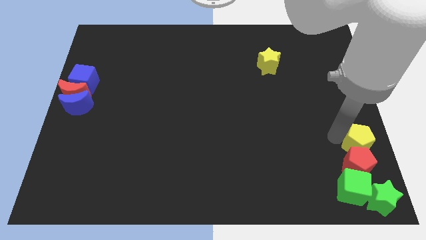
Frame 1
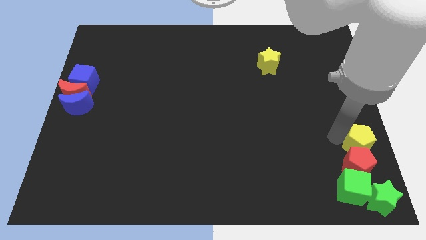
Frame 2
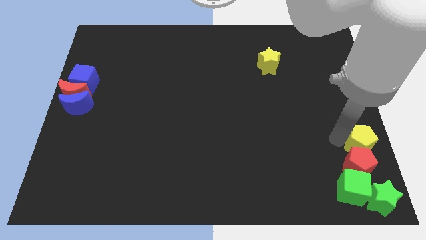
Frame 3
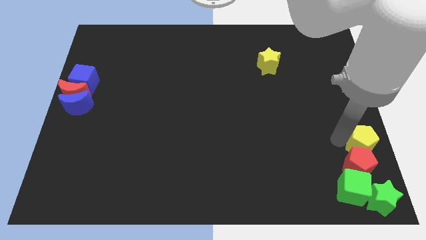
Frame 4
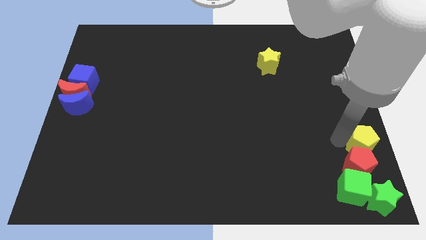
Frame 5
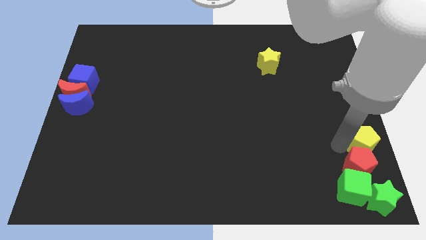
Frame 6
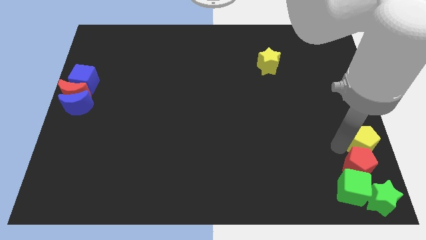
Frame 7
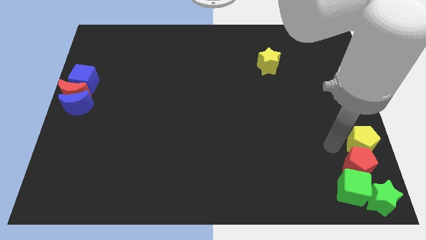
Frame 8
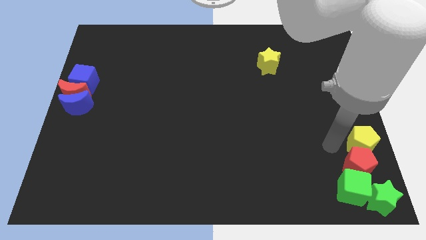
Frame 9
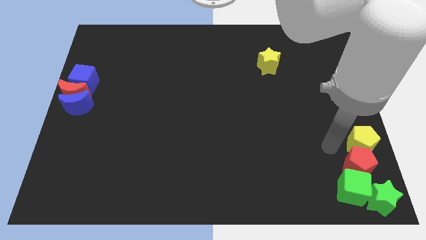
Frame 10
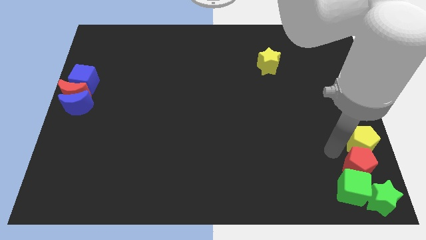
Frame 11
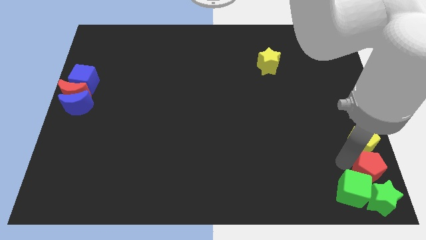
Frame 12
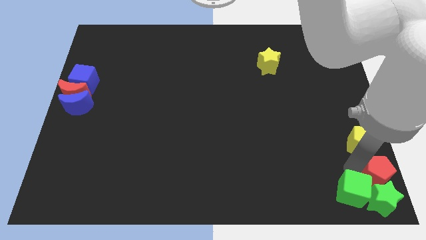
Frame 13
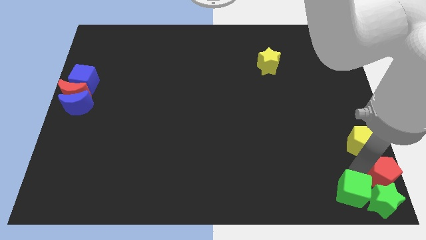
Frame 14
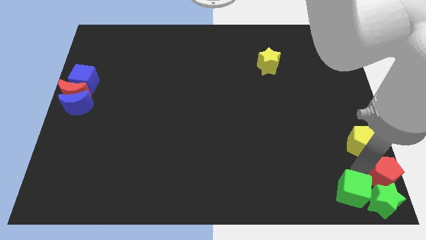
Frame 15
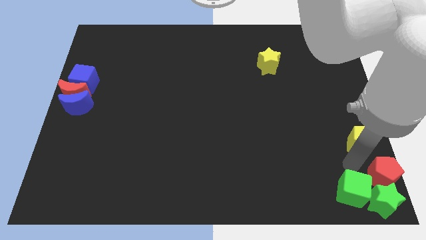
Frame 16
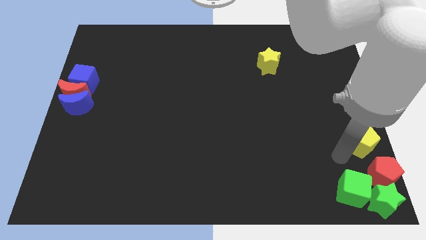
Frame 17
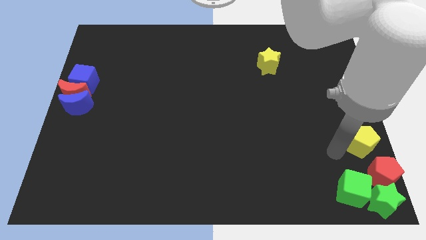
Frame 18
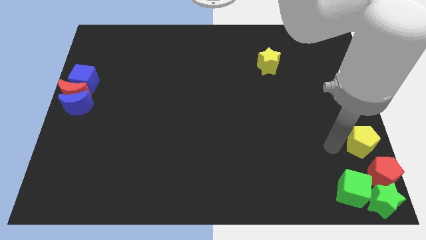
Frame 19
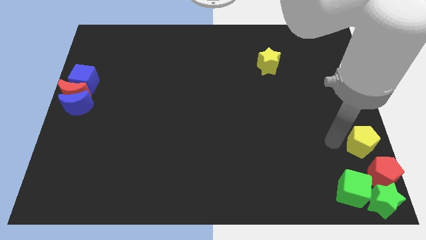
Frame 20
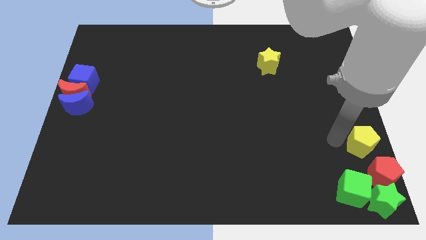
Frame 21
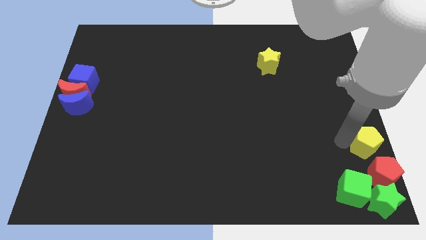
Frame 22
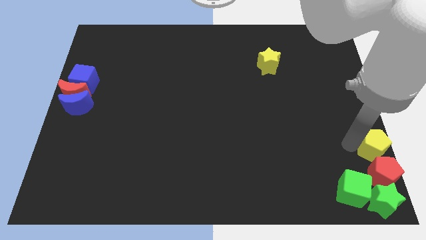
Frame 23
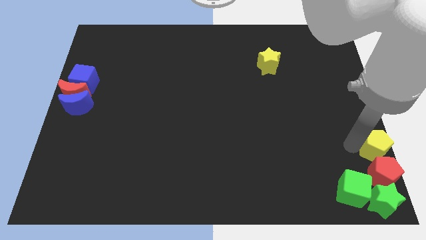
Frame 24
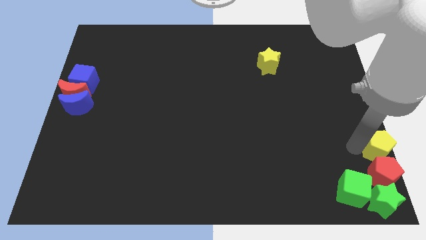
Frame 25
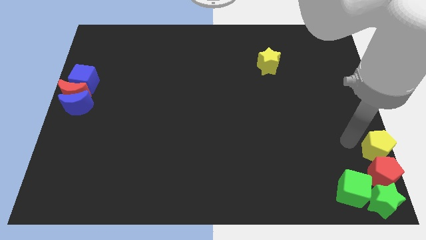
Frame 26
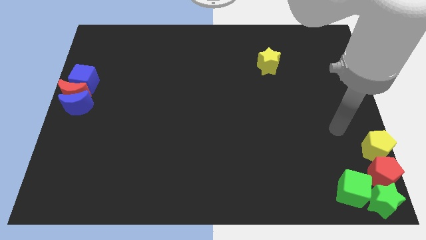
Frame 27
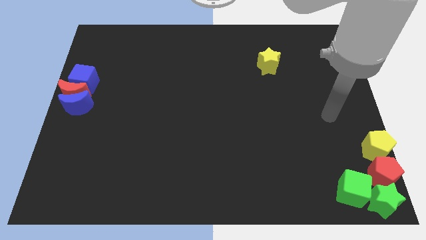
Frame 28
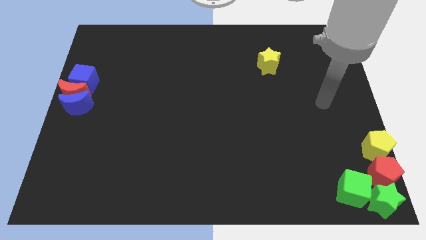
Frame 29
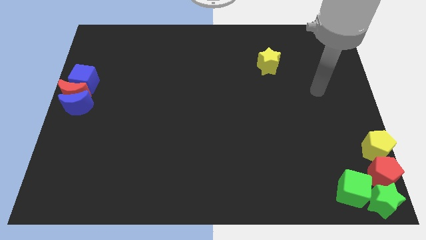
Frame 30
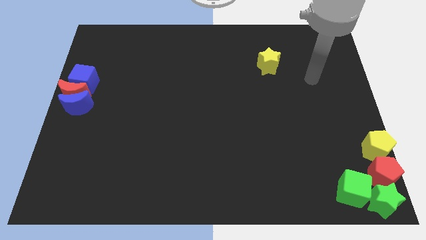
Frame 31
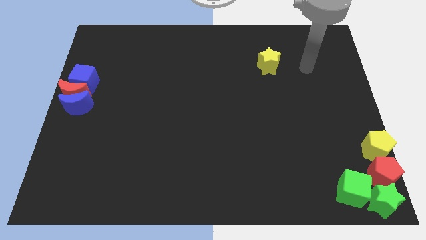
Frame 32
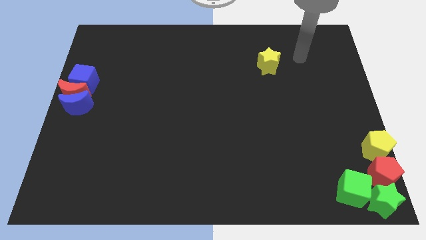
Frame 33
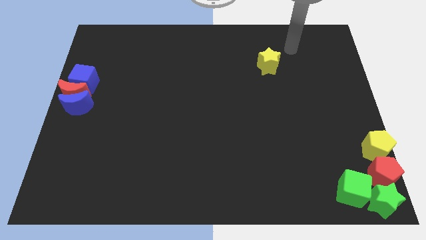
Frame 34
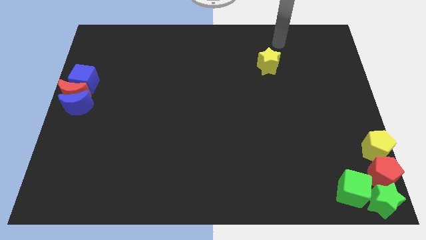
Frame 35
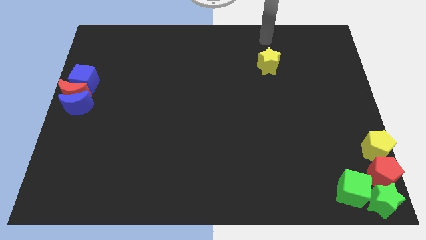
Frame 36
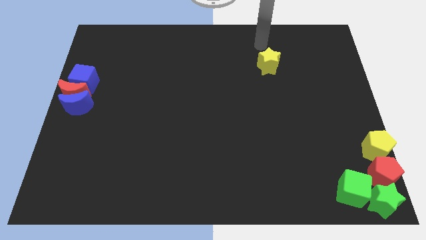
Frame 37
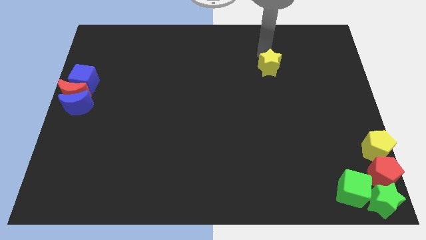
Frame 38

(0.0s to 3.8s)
put the red and the yellow pentagon vertically above the green star

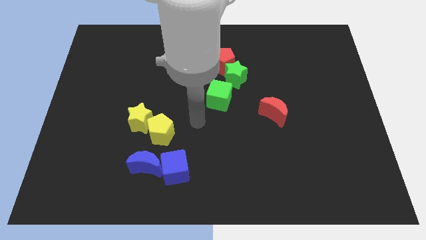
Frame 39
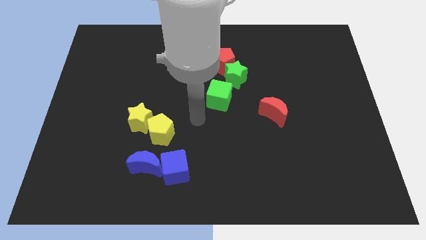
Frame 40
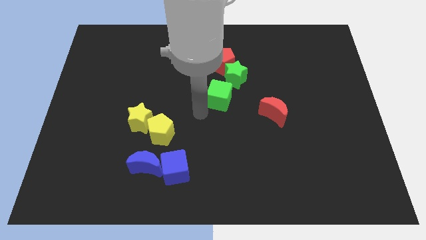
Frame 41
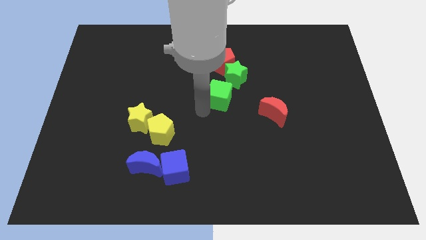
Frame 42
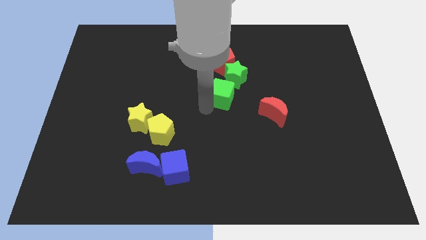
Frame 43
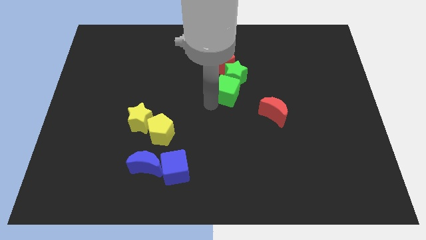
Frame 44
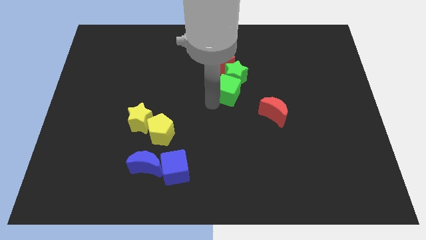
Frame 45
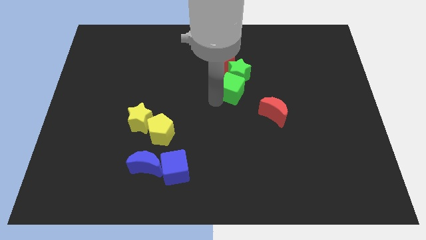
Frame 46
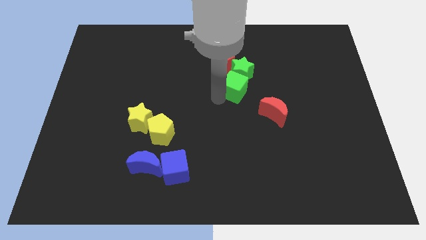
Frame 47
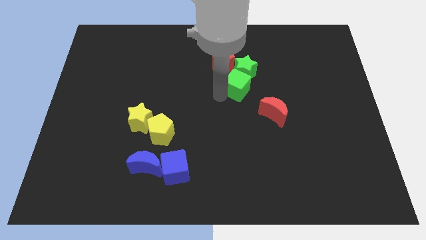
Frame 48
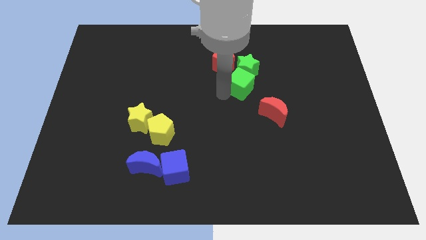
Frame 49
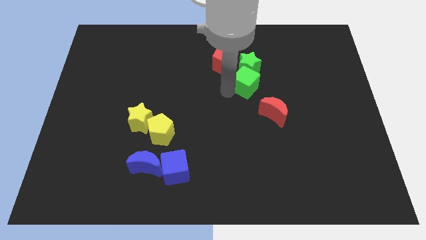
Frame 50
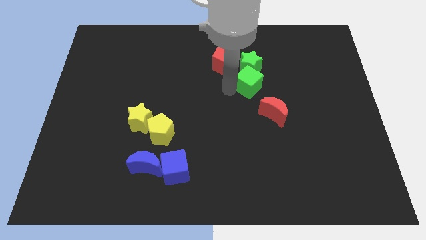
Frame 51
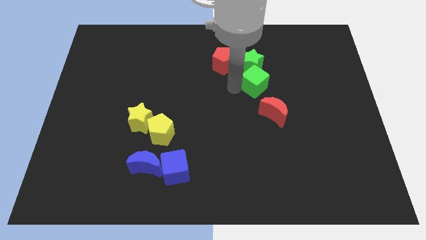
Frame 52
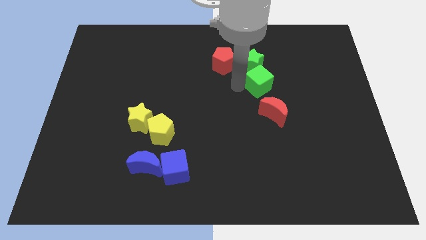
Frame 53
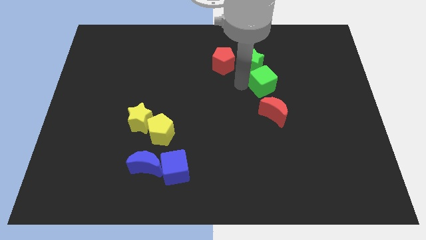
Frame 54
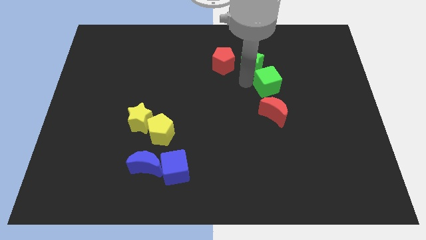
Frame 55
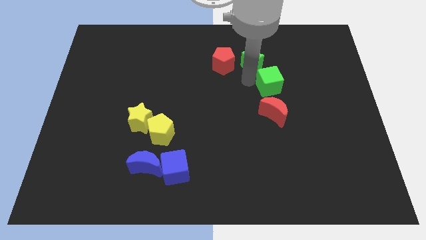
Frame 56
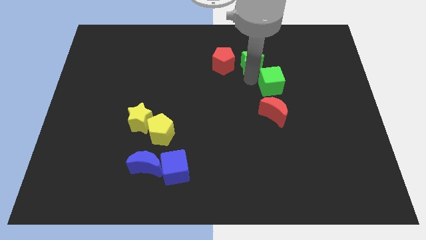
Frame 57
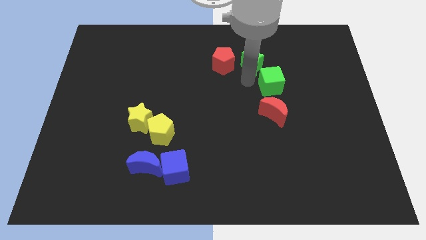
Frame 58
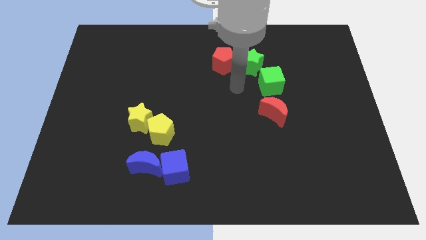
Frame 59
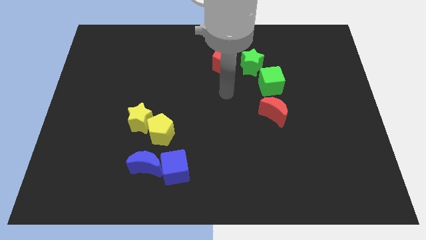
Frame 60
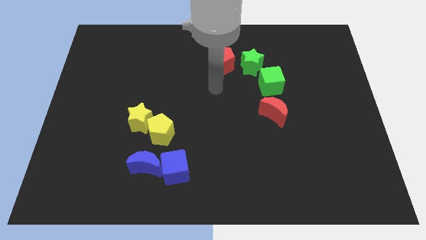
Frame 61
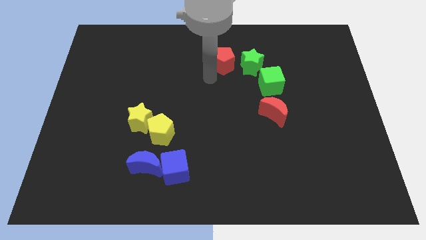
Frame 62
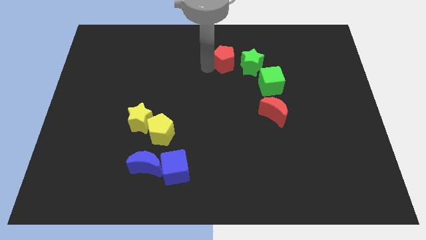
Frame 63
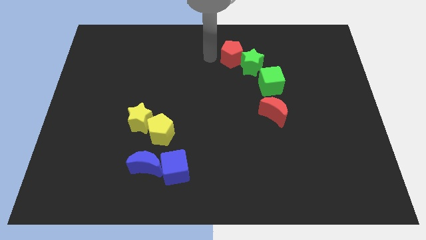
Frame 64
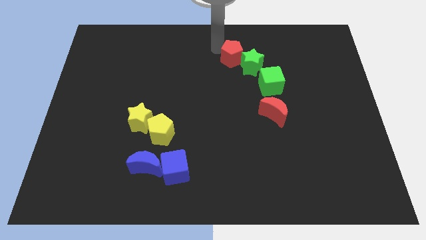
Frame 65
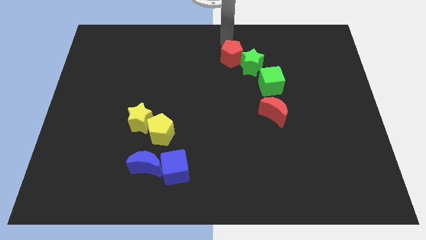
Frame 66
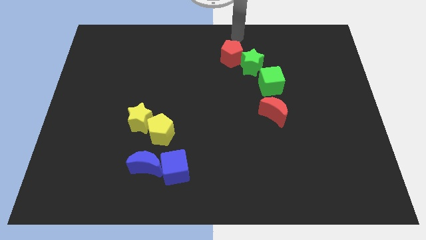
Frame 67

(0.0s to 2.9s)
move the green blocks between the red blocks

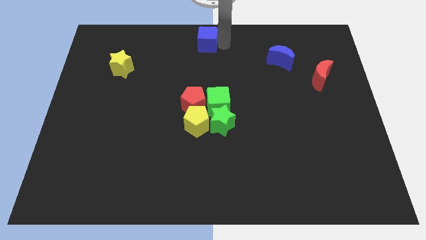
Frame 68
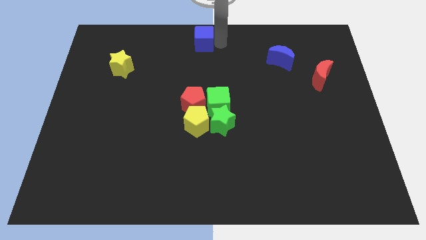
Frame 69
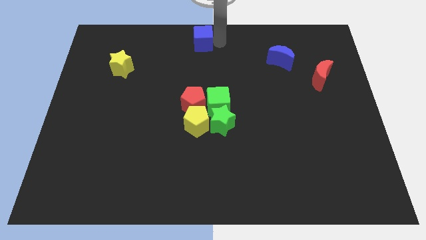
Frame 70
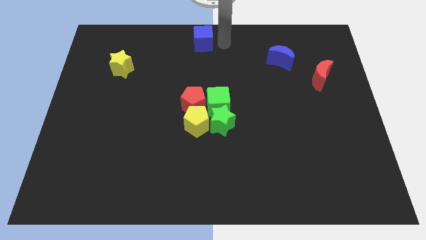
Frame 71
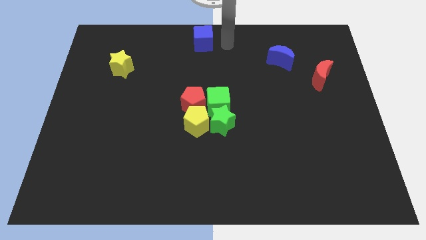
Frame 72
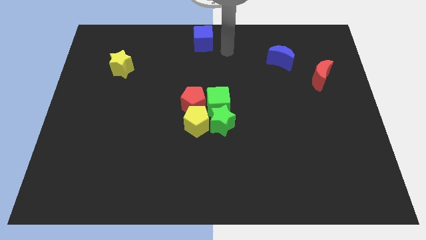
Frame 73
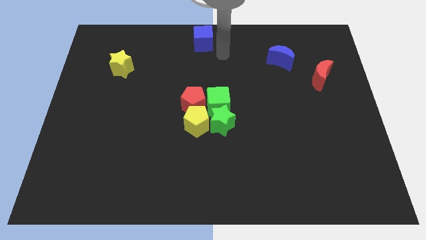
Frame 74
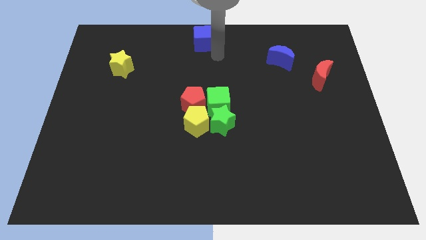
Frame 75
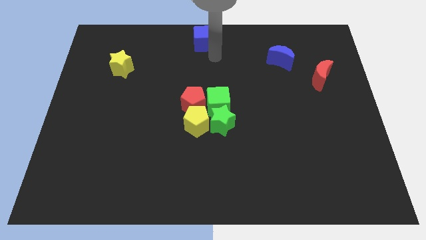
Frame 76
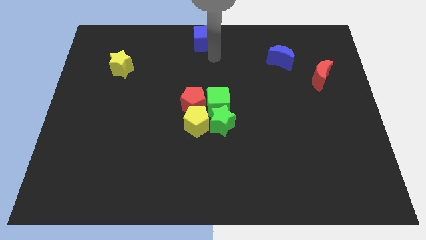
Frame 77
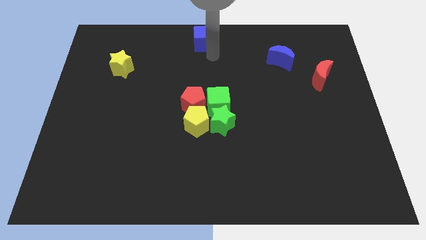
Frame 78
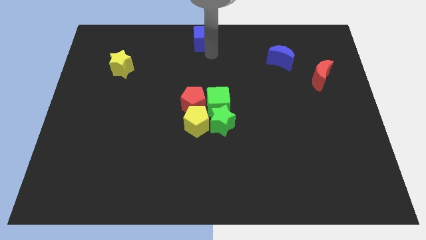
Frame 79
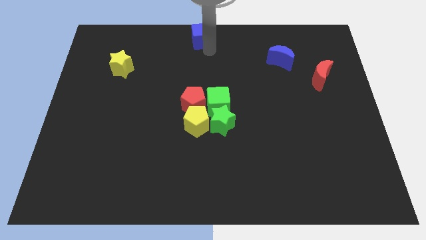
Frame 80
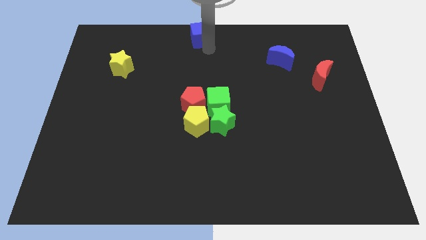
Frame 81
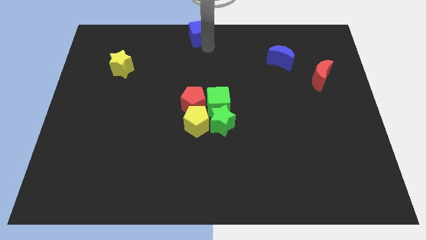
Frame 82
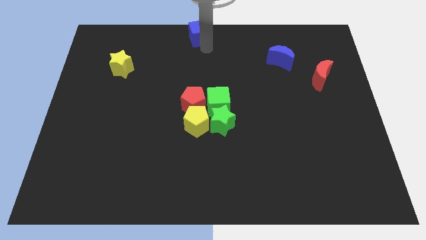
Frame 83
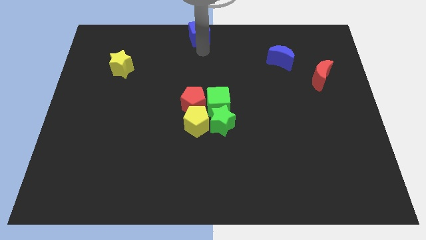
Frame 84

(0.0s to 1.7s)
move the blue cube to the top center of the board

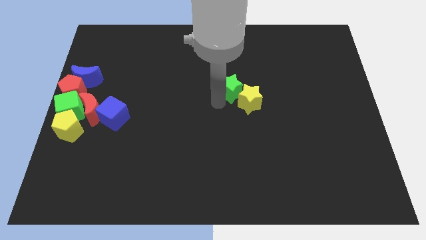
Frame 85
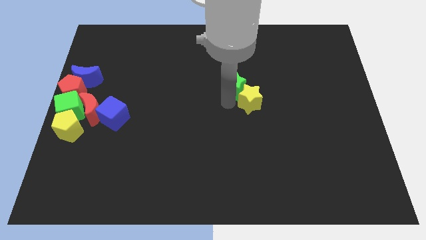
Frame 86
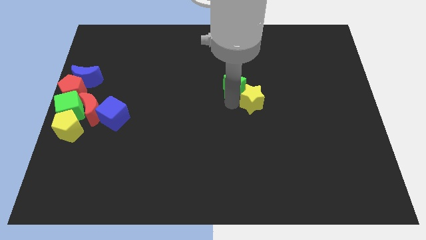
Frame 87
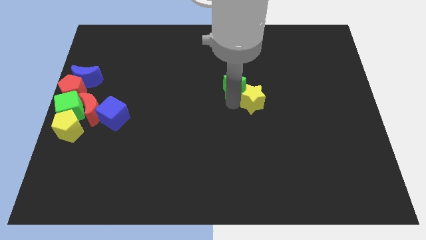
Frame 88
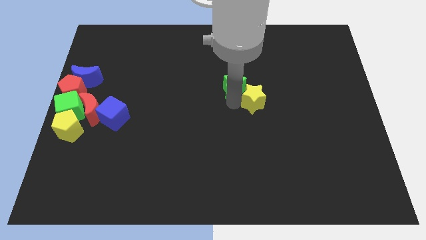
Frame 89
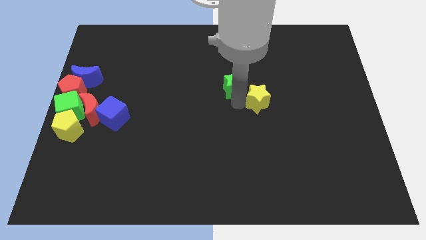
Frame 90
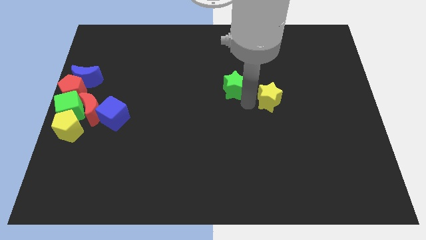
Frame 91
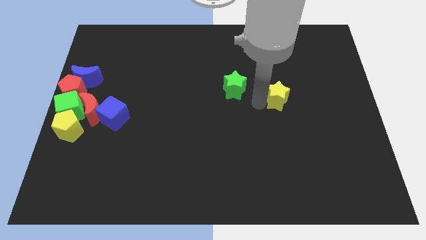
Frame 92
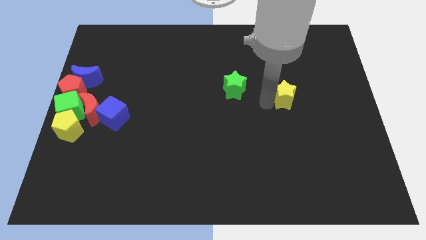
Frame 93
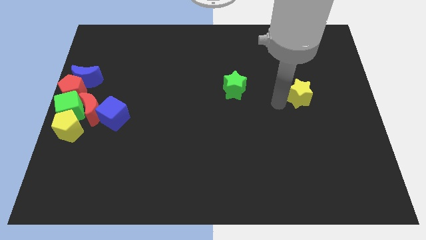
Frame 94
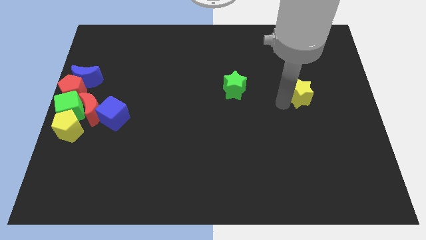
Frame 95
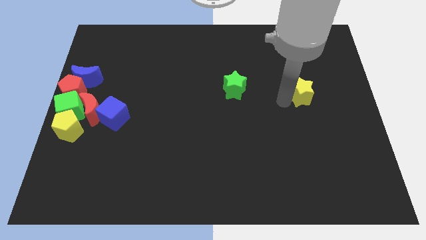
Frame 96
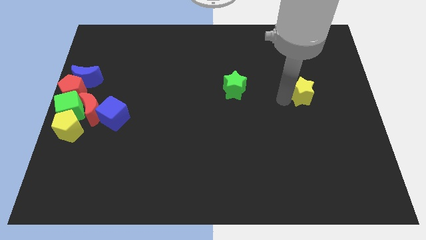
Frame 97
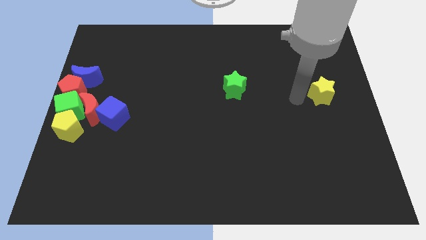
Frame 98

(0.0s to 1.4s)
separate the green star and yellow star
